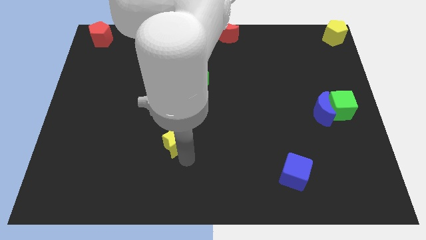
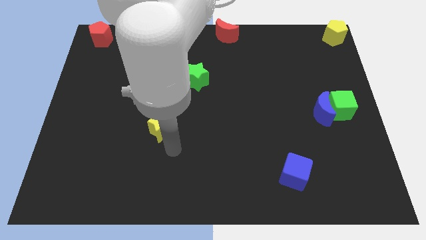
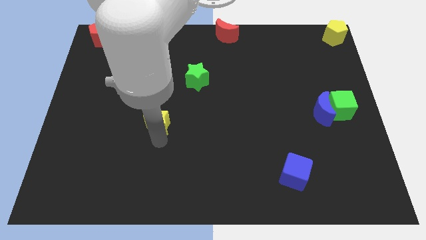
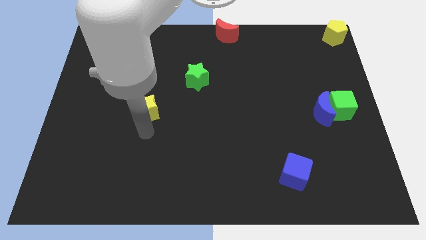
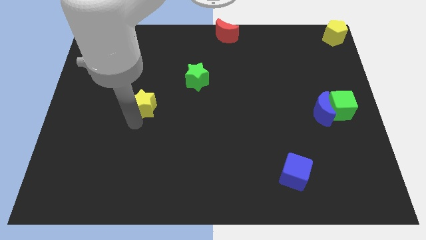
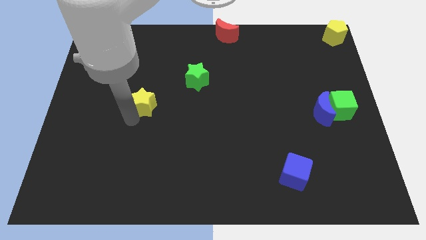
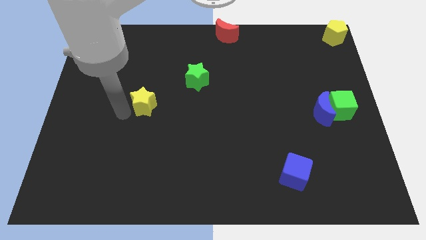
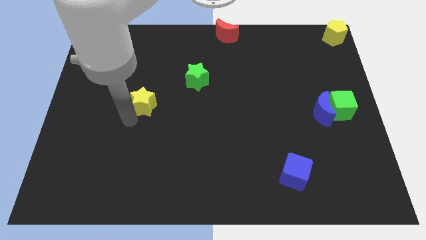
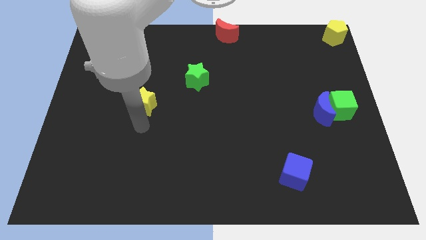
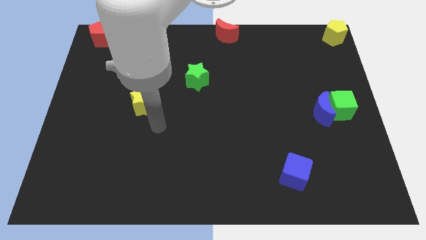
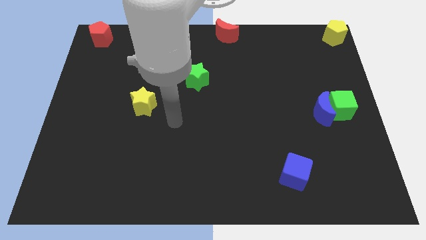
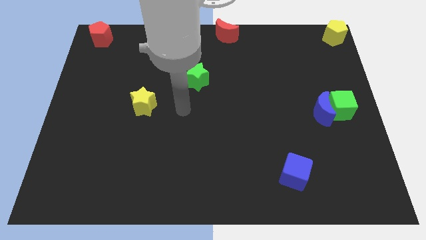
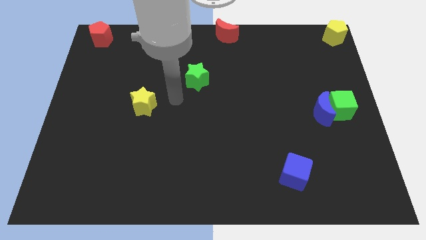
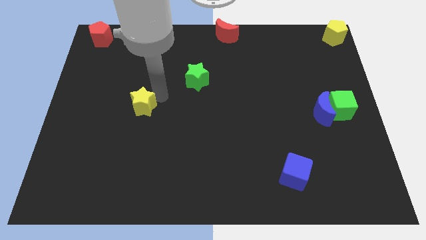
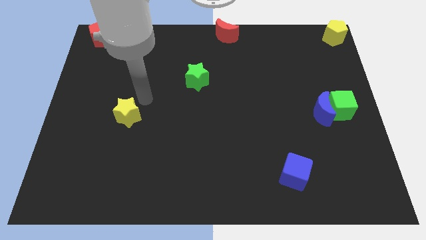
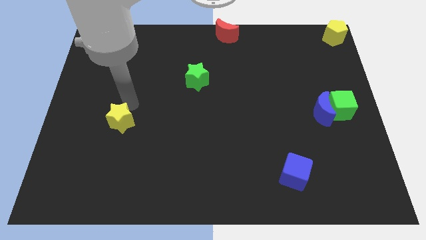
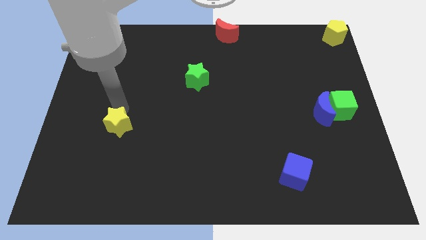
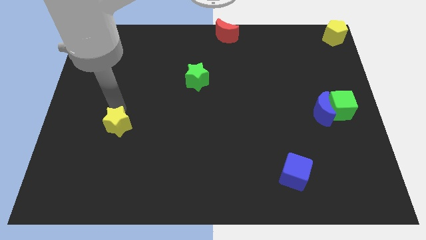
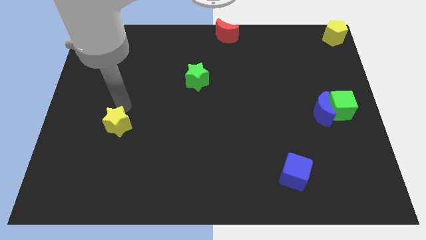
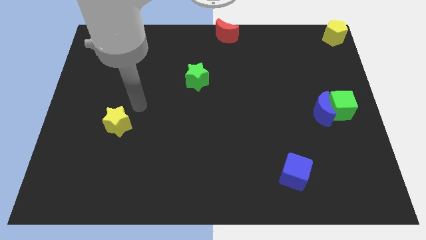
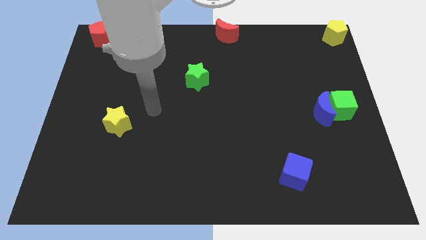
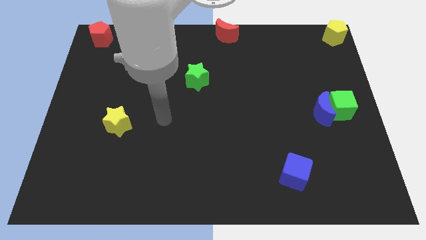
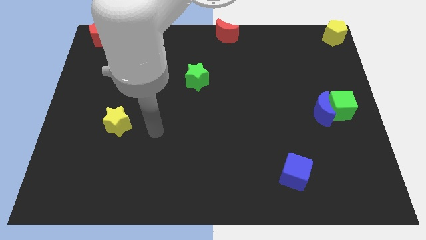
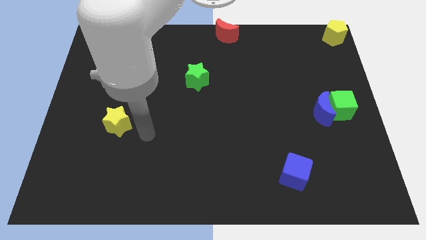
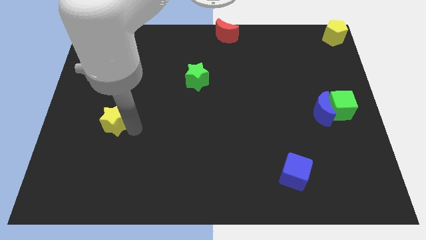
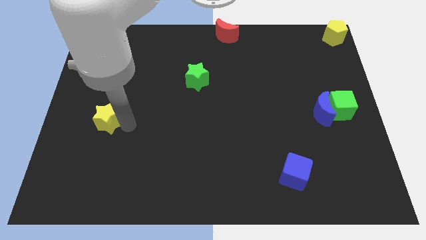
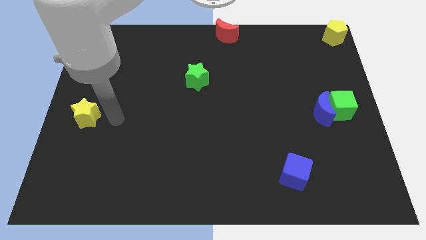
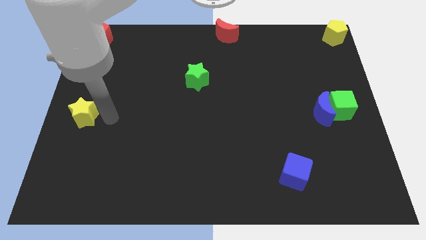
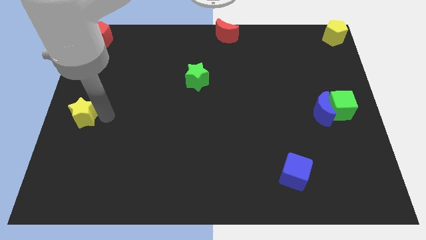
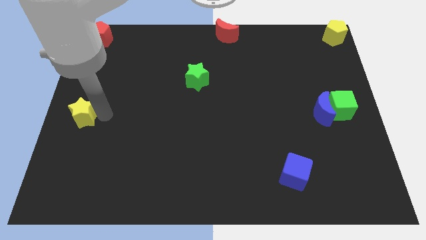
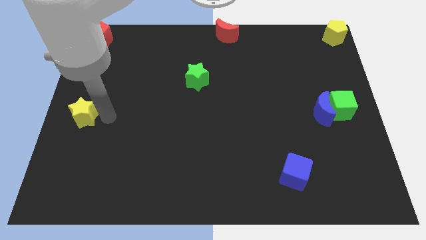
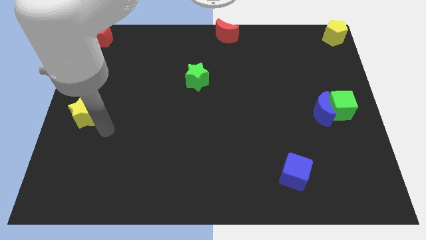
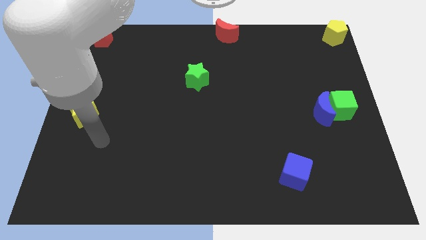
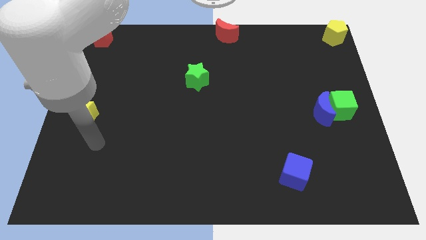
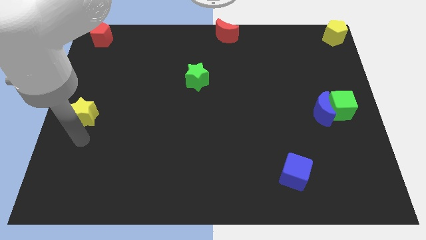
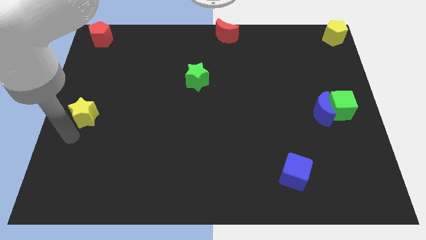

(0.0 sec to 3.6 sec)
place the yellow star towards center left of the board

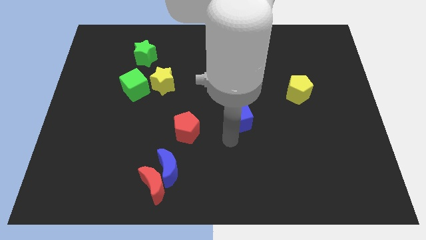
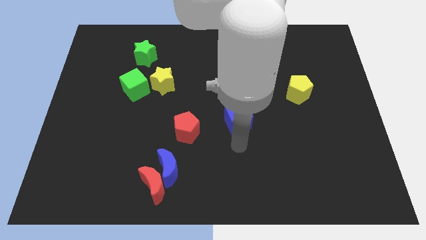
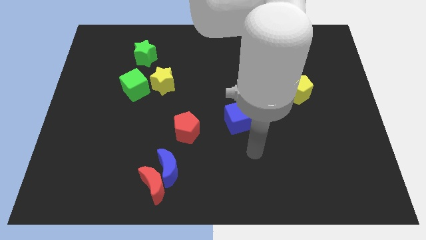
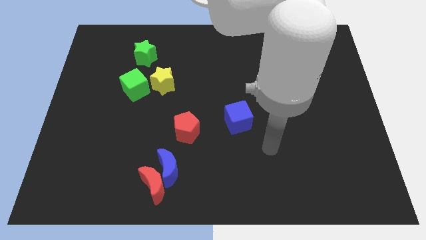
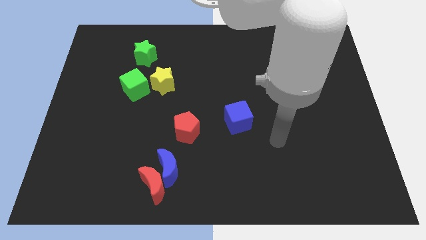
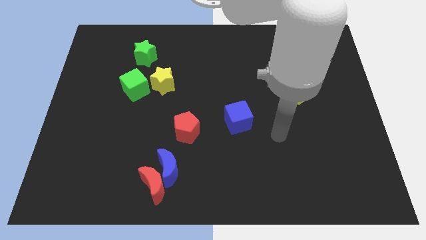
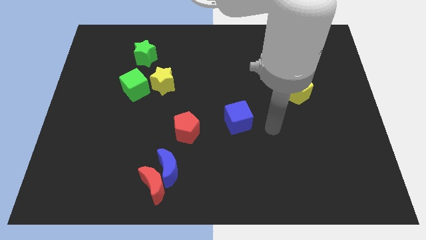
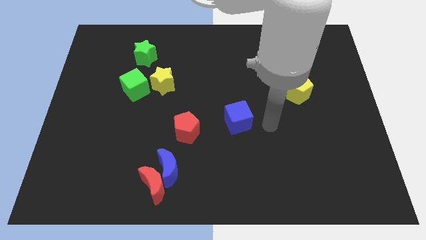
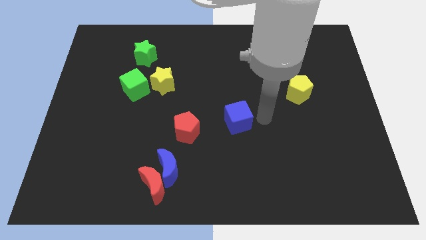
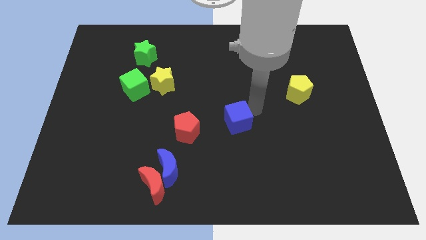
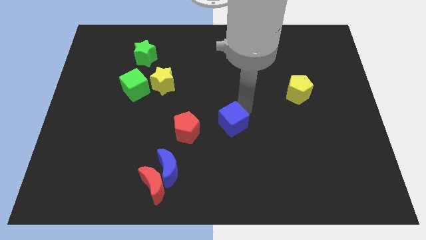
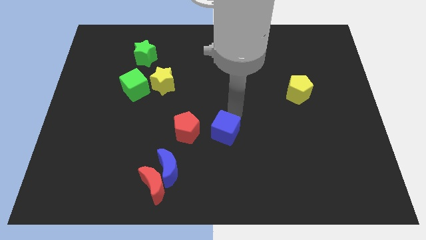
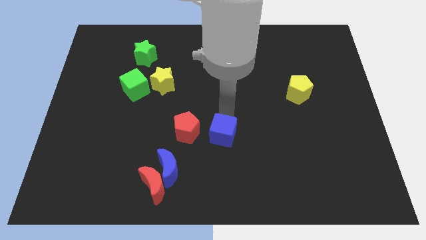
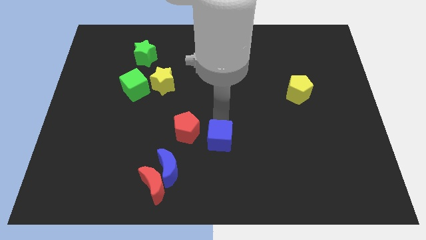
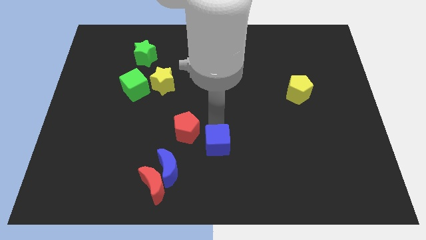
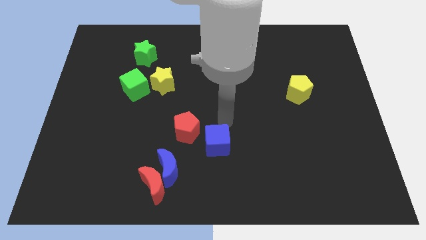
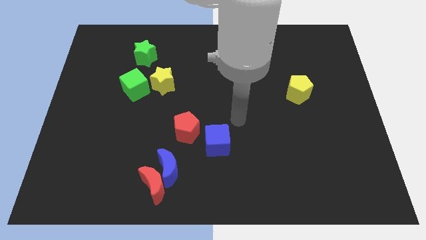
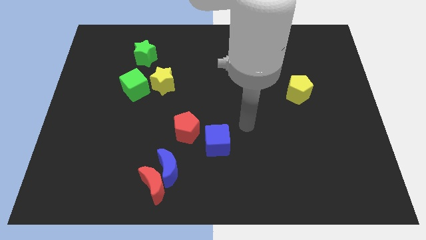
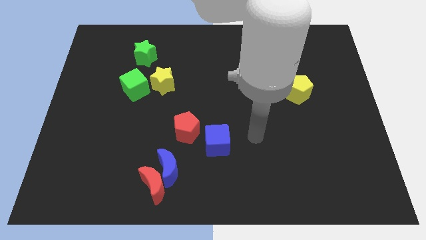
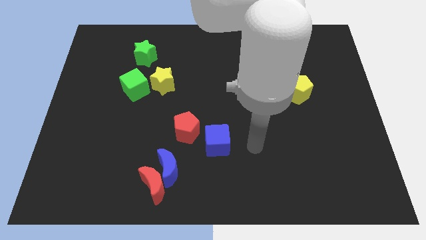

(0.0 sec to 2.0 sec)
move blue cube right of red pentagon

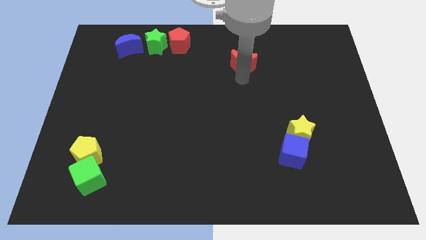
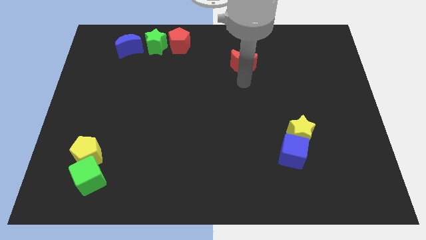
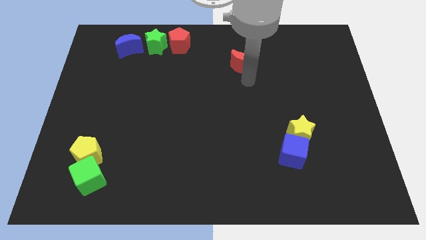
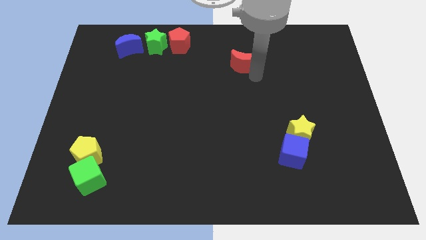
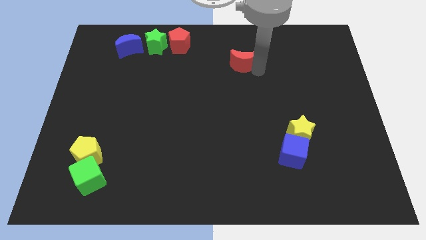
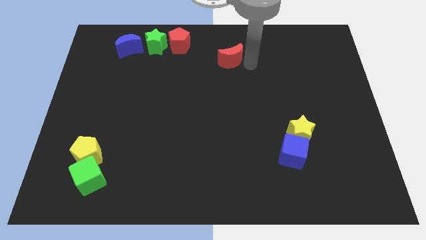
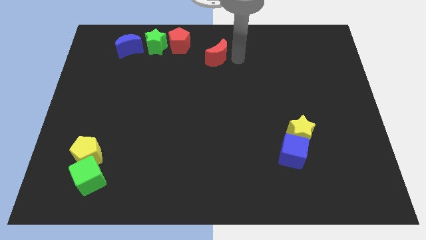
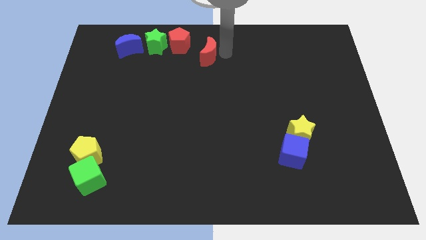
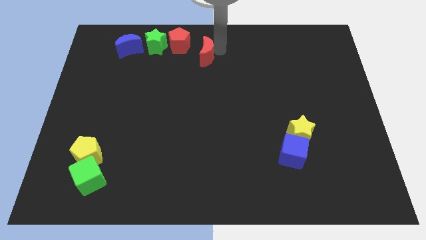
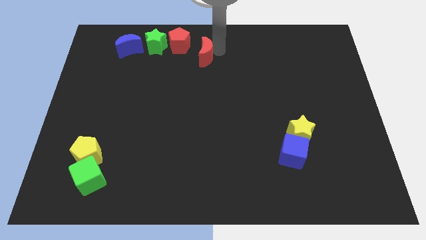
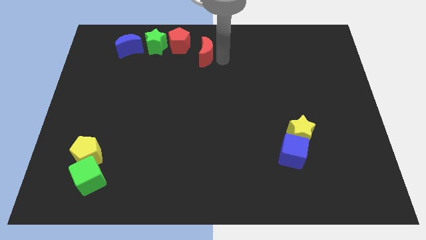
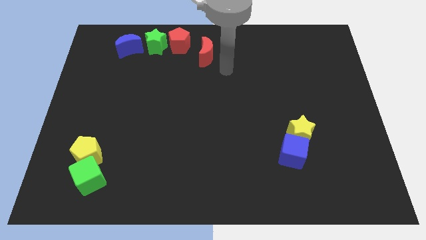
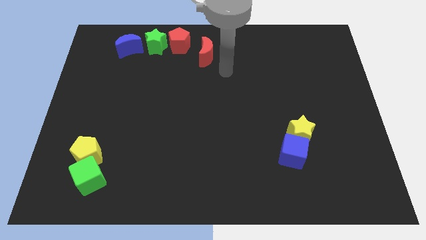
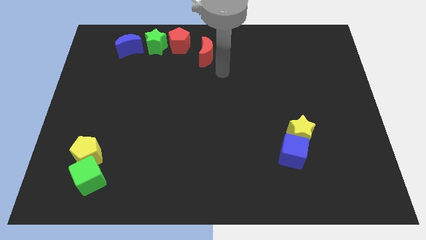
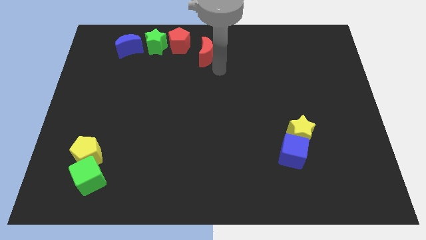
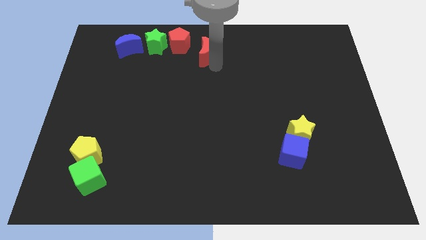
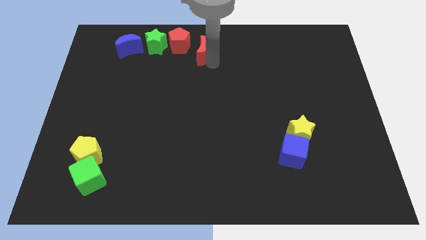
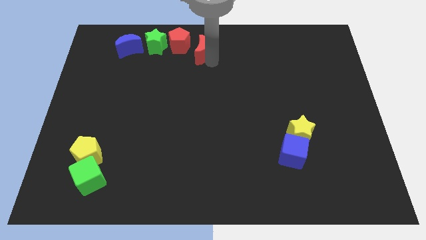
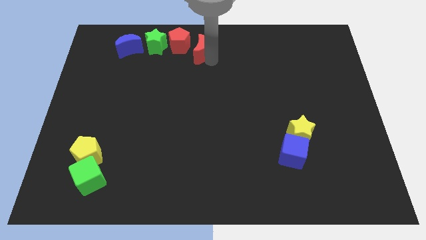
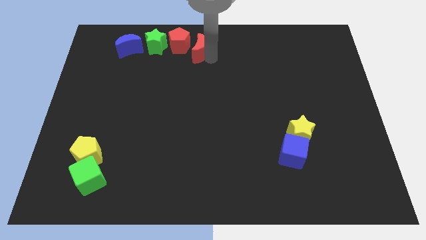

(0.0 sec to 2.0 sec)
drag the red moon to the left

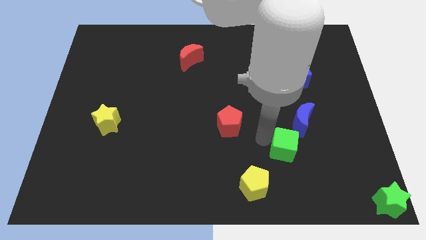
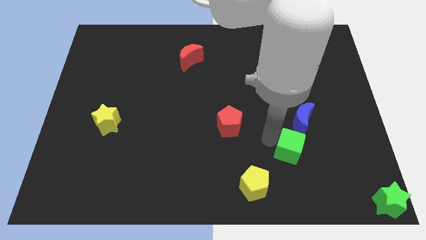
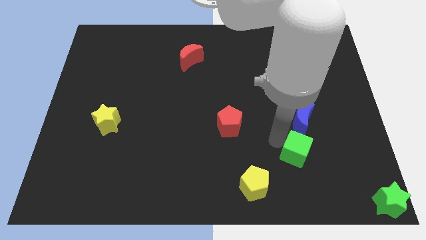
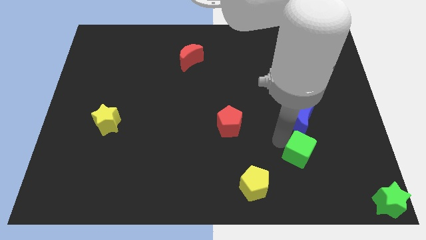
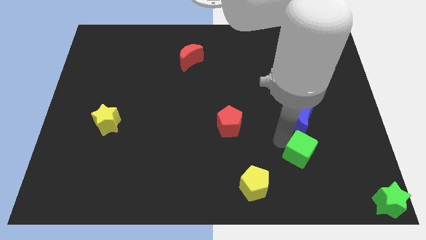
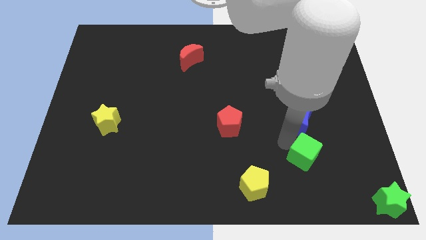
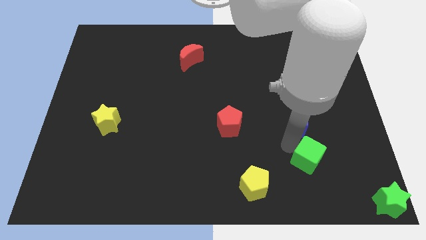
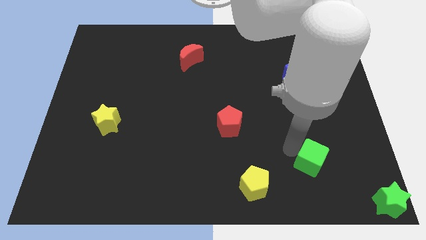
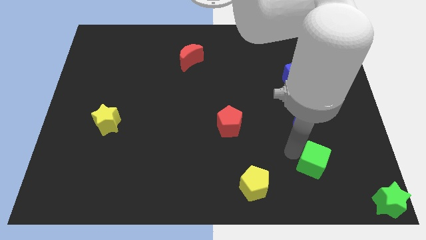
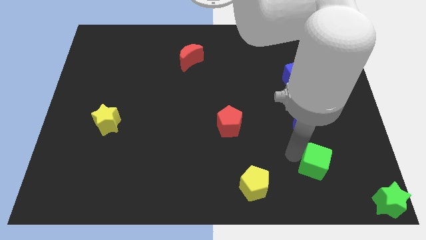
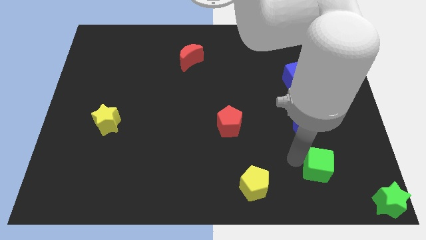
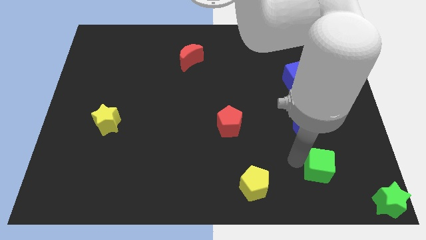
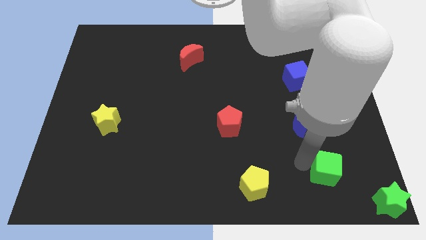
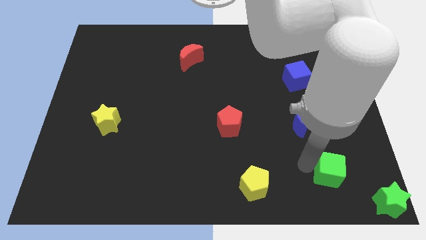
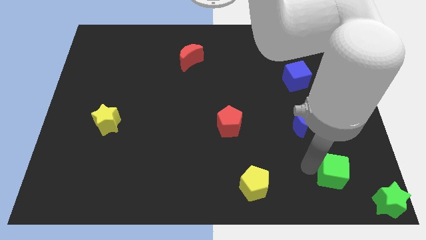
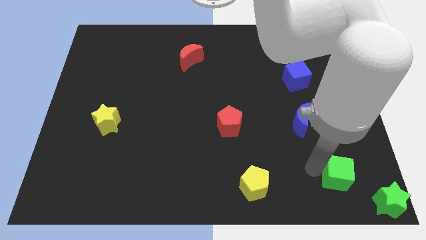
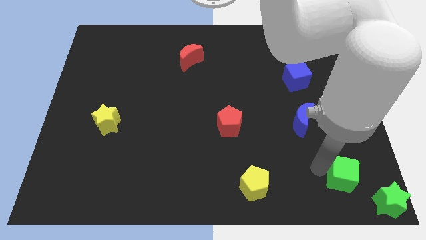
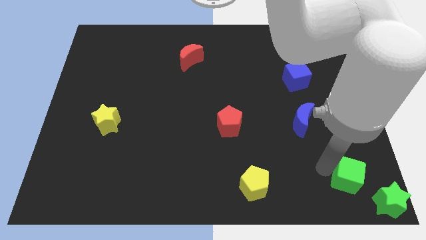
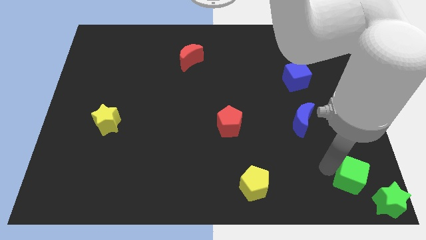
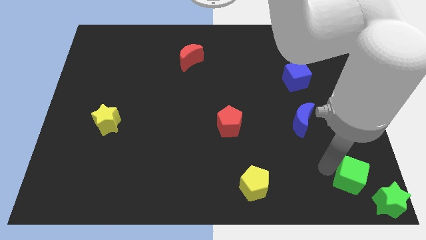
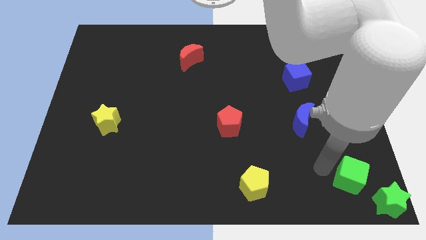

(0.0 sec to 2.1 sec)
move the green cube diagonally to the green star
